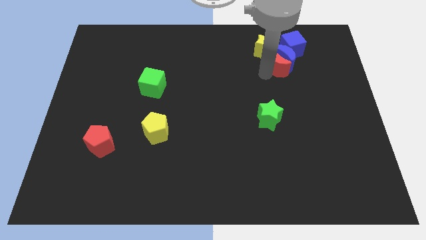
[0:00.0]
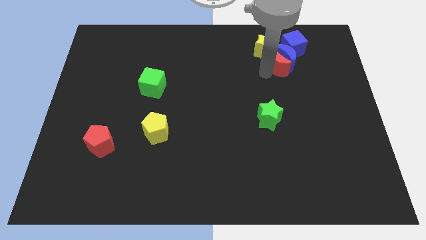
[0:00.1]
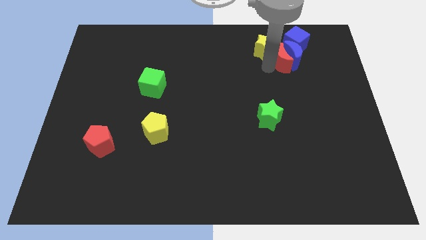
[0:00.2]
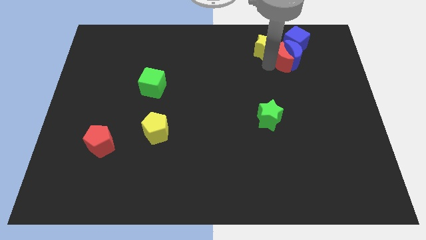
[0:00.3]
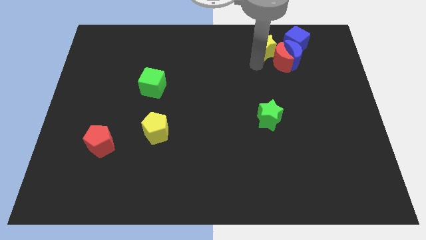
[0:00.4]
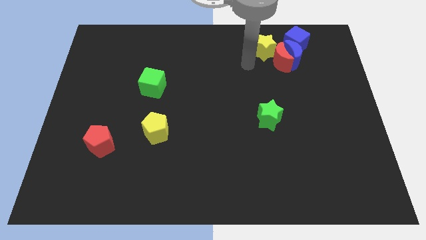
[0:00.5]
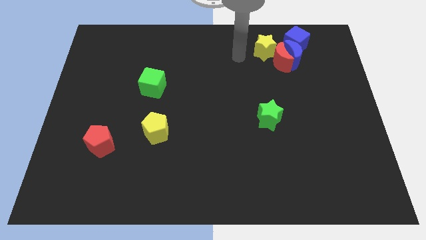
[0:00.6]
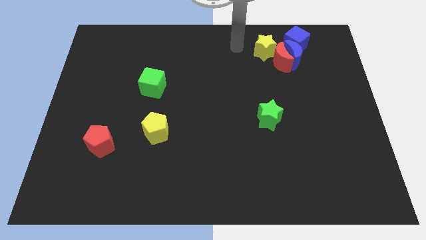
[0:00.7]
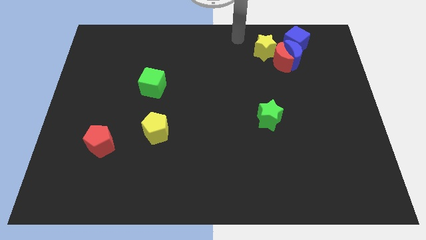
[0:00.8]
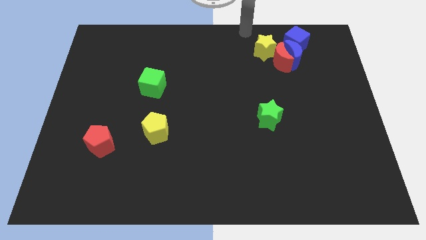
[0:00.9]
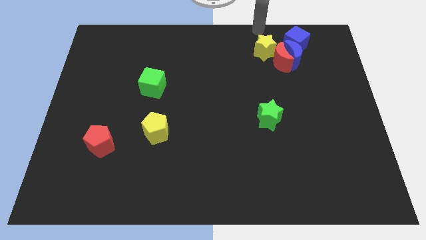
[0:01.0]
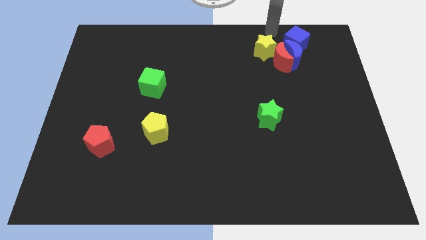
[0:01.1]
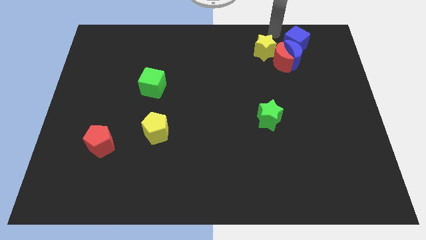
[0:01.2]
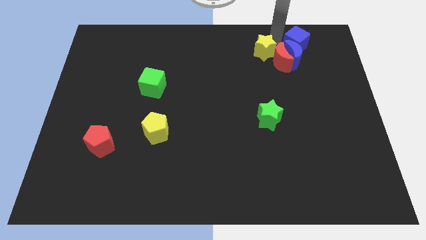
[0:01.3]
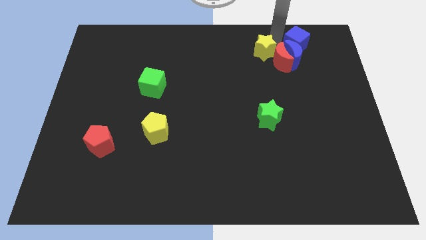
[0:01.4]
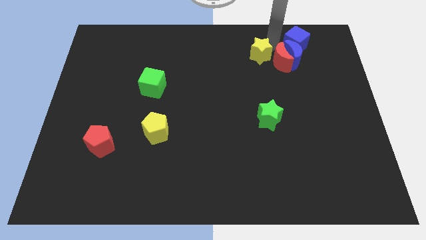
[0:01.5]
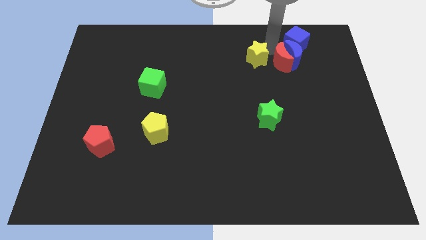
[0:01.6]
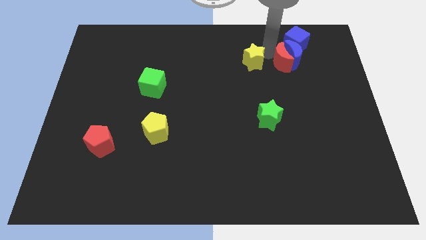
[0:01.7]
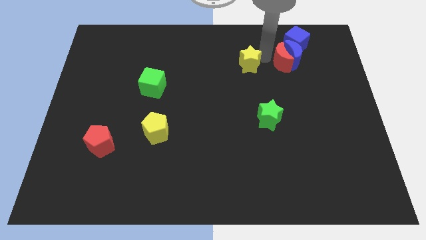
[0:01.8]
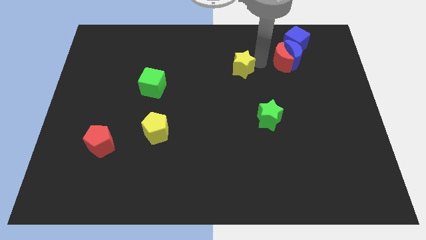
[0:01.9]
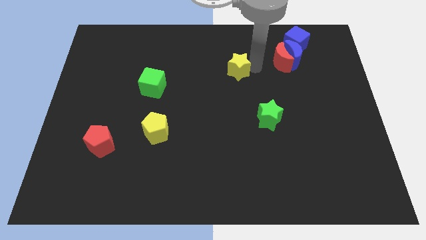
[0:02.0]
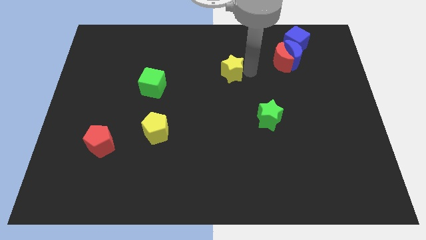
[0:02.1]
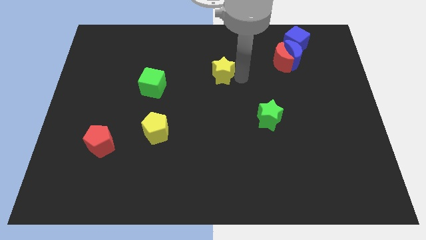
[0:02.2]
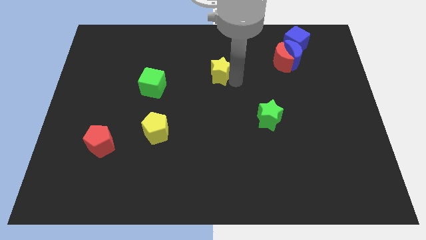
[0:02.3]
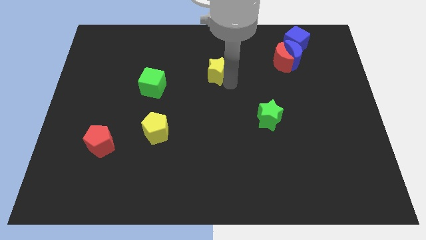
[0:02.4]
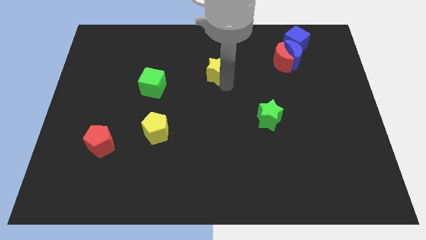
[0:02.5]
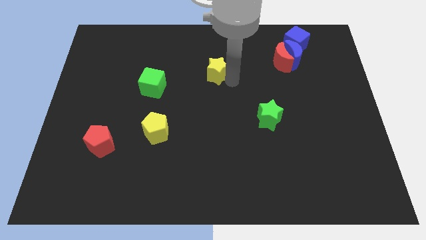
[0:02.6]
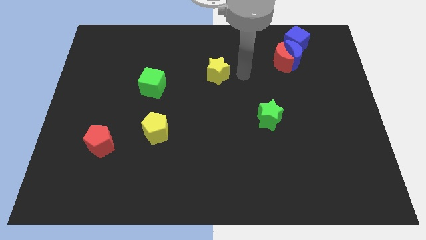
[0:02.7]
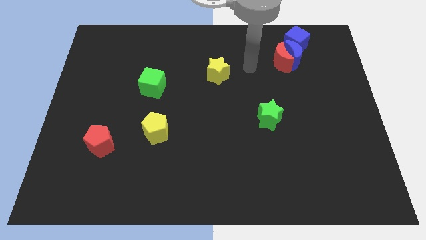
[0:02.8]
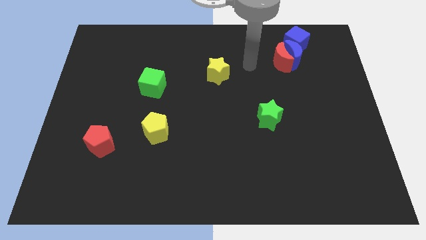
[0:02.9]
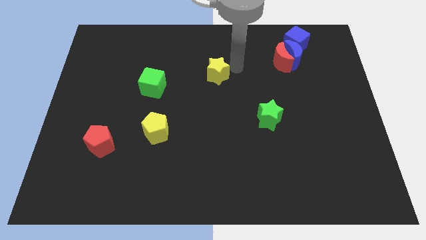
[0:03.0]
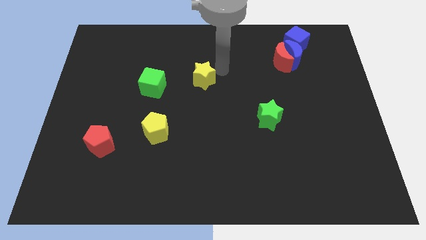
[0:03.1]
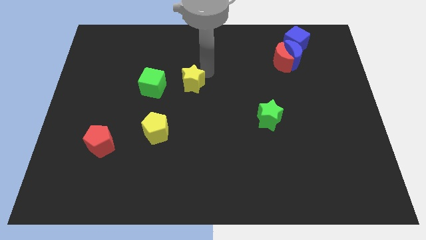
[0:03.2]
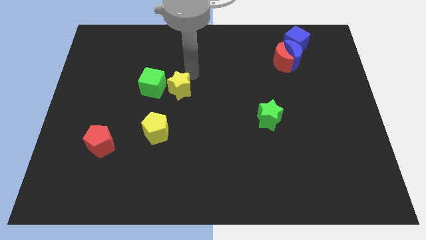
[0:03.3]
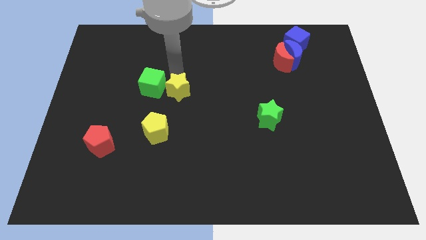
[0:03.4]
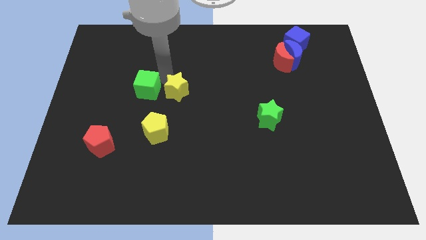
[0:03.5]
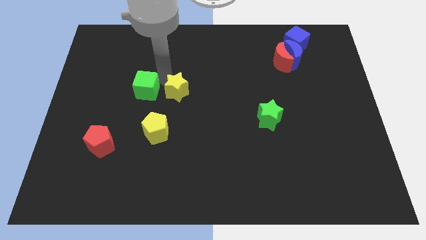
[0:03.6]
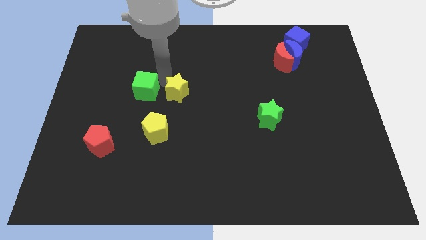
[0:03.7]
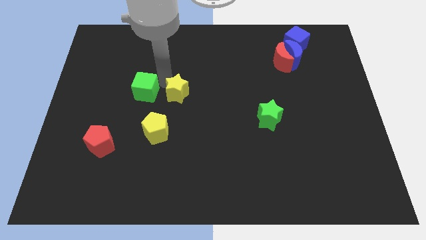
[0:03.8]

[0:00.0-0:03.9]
push yellow star beside green cube

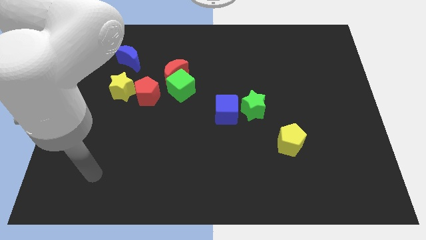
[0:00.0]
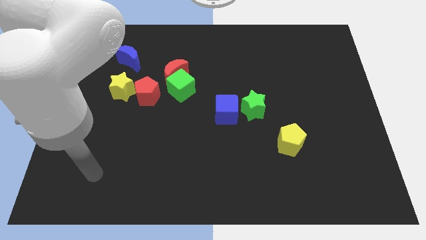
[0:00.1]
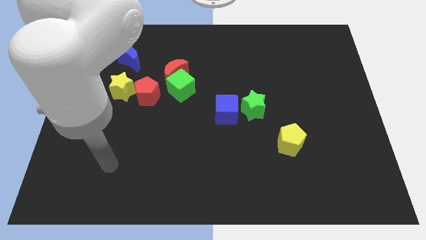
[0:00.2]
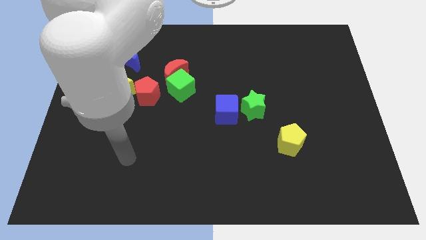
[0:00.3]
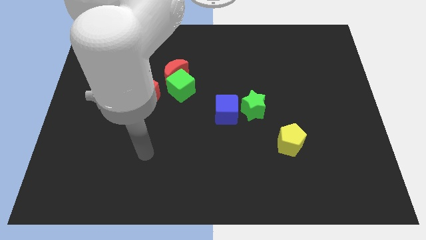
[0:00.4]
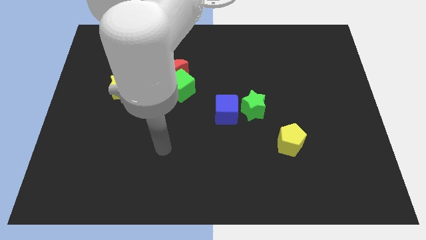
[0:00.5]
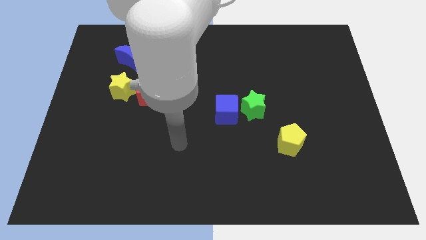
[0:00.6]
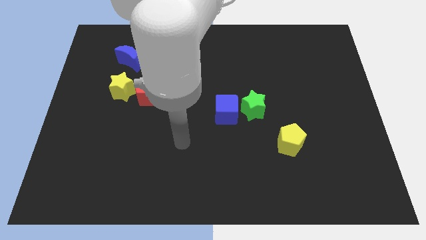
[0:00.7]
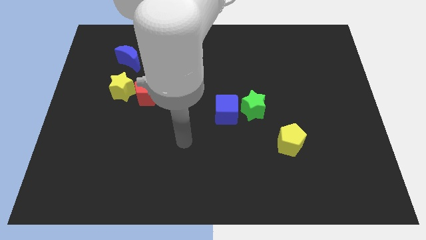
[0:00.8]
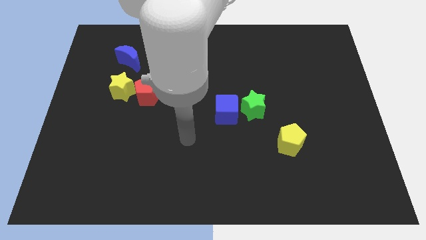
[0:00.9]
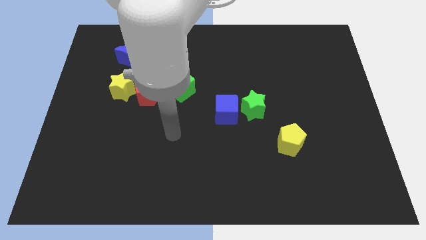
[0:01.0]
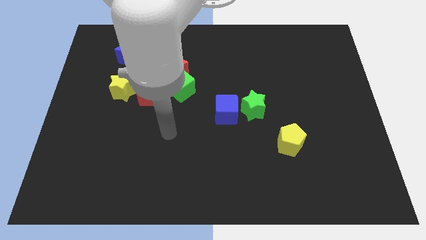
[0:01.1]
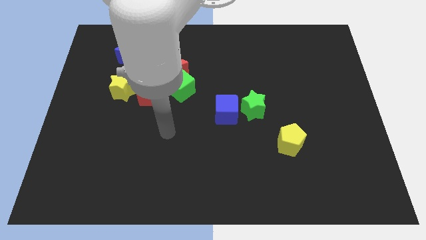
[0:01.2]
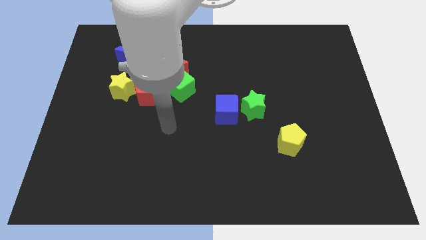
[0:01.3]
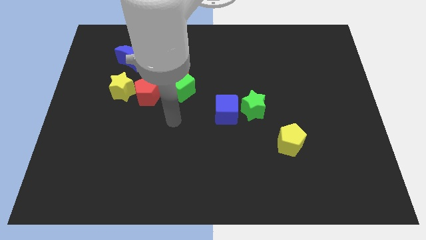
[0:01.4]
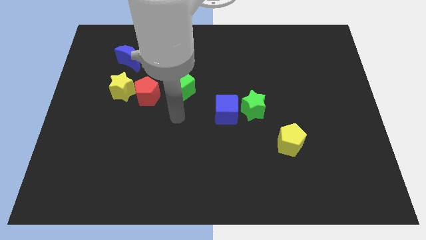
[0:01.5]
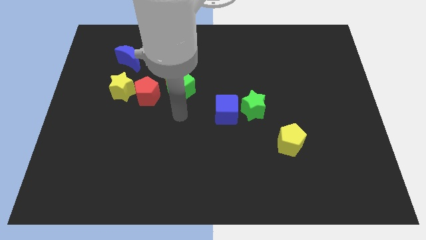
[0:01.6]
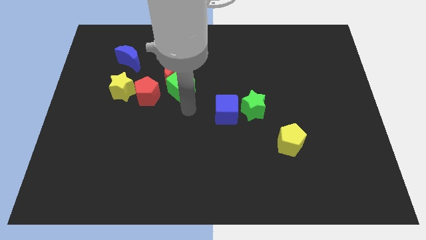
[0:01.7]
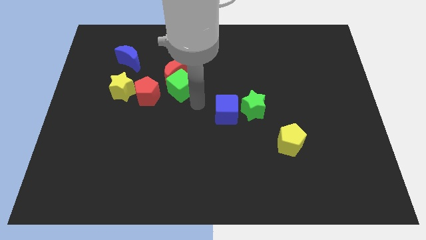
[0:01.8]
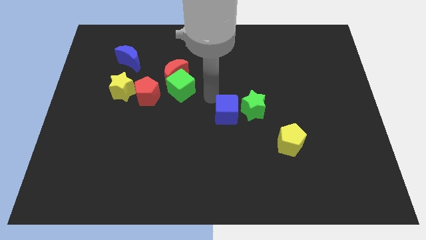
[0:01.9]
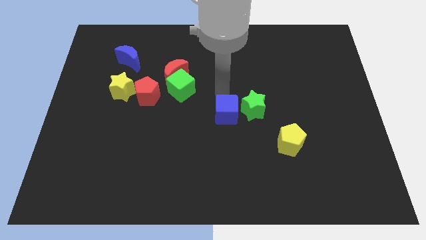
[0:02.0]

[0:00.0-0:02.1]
move your arm on top of blue cube

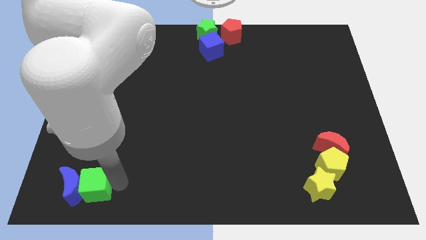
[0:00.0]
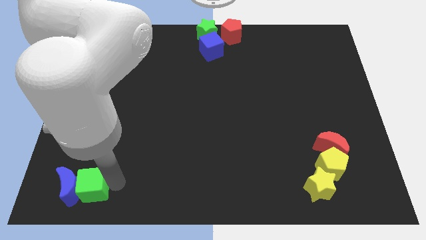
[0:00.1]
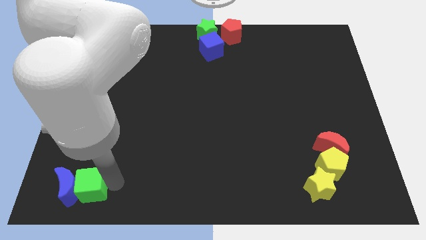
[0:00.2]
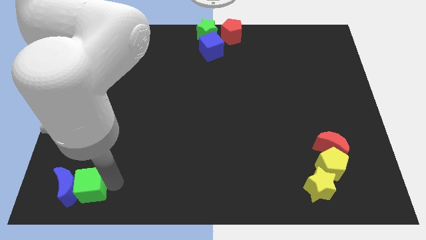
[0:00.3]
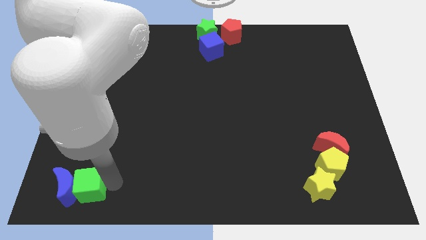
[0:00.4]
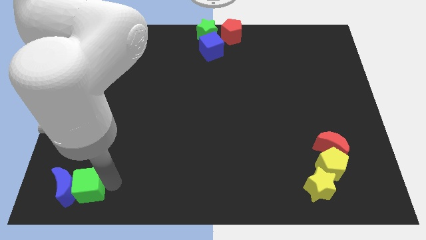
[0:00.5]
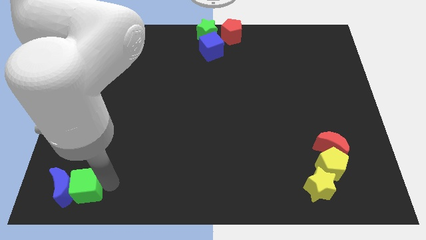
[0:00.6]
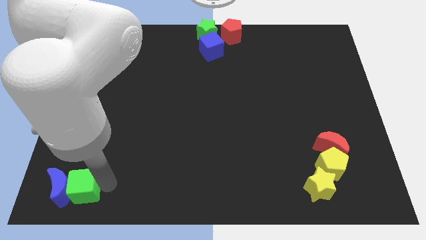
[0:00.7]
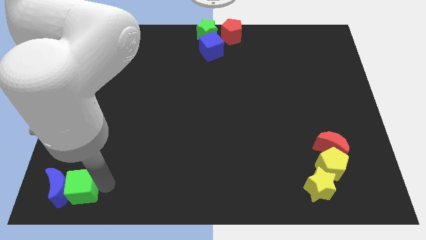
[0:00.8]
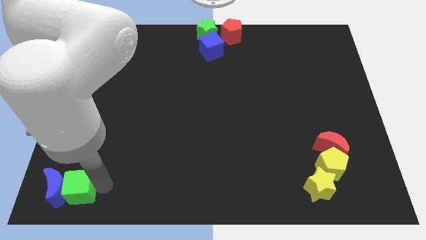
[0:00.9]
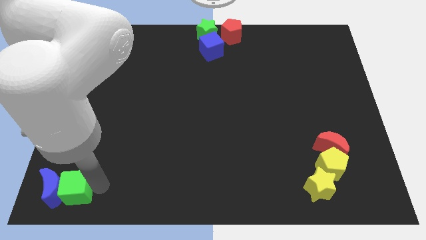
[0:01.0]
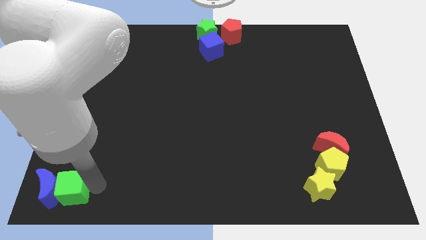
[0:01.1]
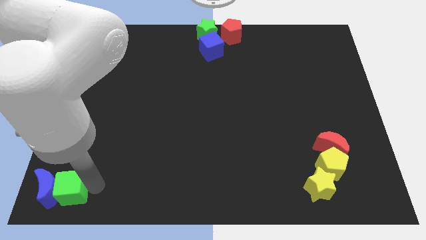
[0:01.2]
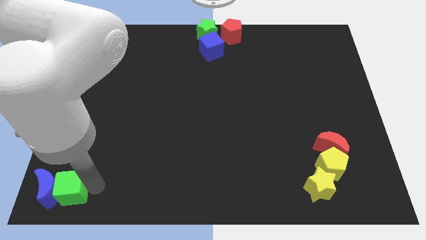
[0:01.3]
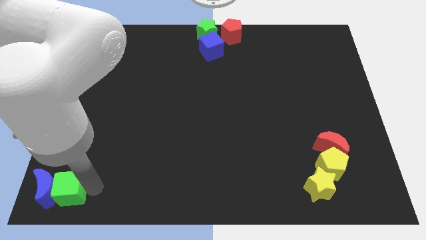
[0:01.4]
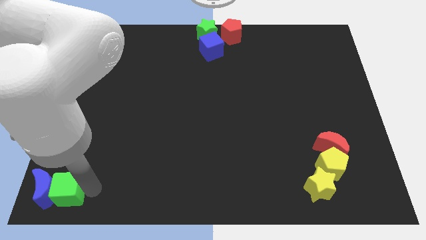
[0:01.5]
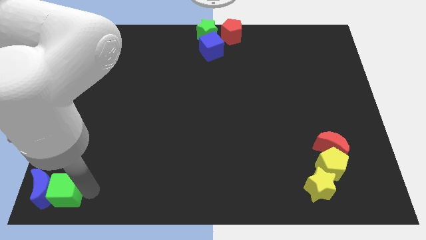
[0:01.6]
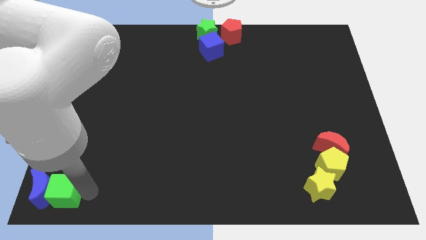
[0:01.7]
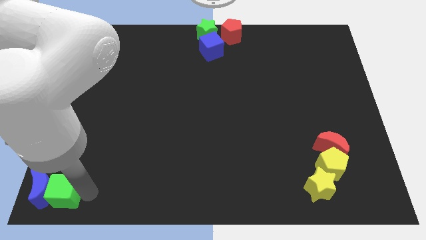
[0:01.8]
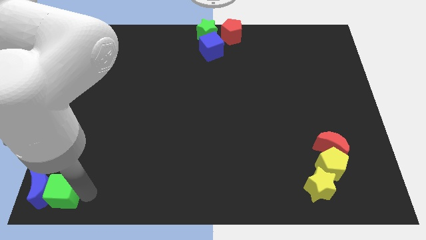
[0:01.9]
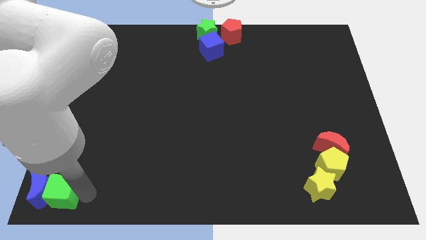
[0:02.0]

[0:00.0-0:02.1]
move the blue crescent with the green cube to the bottom left of the board

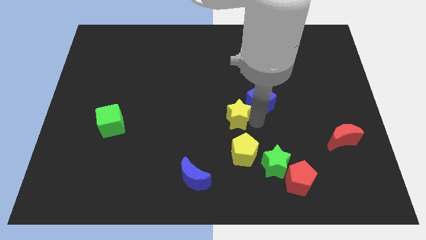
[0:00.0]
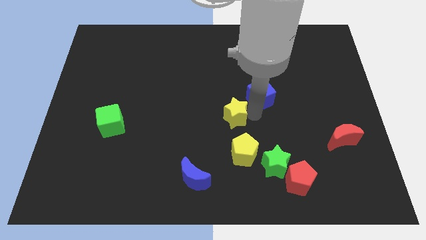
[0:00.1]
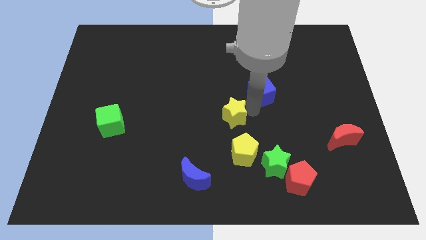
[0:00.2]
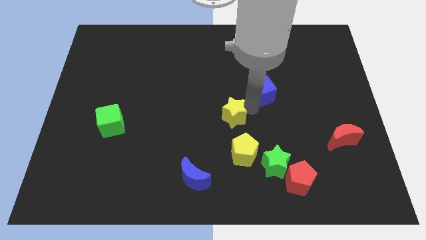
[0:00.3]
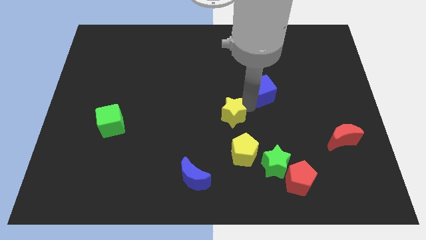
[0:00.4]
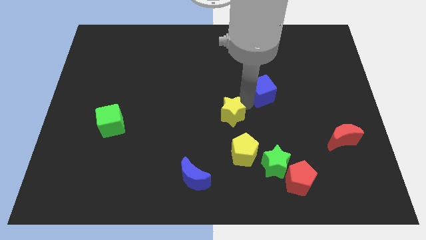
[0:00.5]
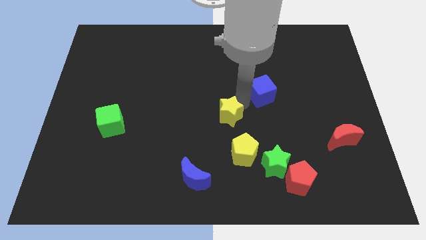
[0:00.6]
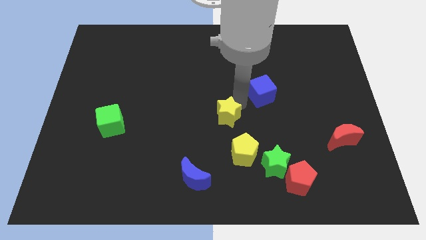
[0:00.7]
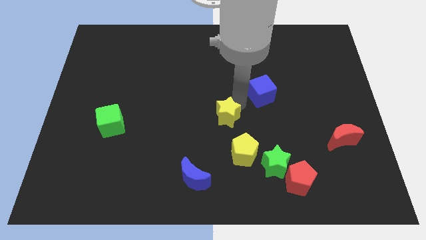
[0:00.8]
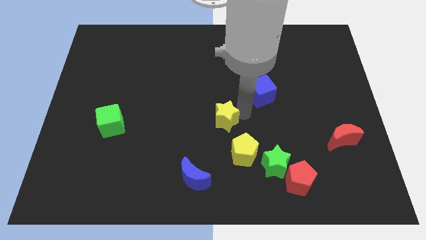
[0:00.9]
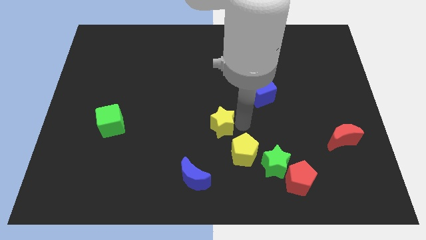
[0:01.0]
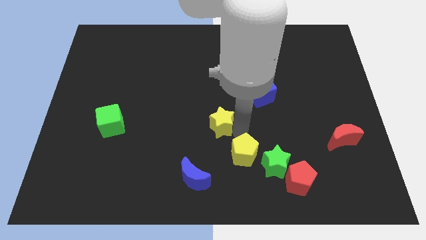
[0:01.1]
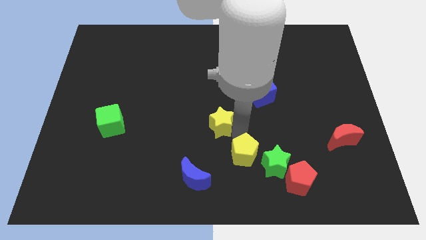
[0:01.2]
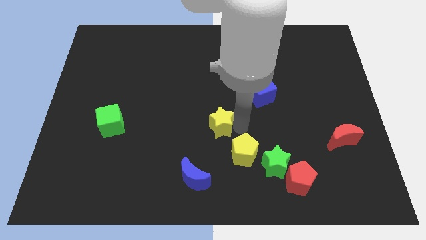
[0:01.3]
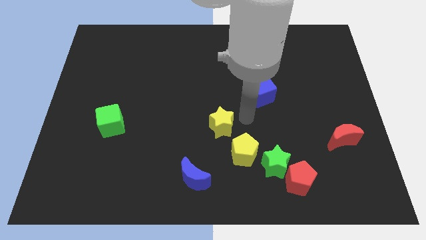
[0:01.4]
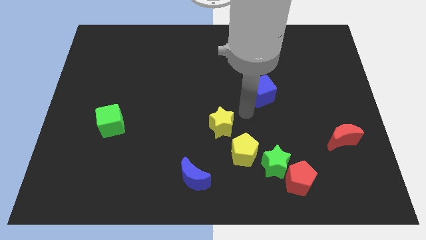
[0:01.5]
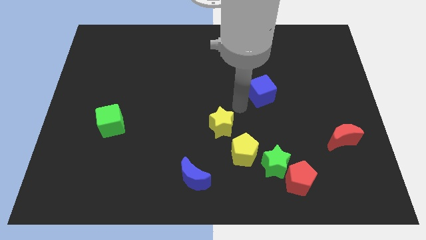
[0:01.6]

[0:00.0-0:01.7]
separate the yellow star and blue cube
